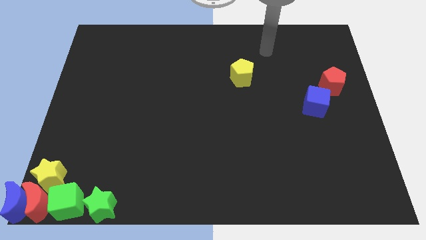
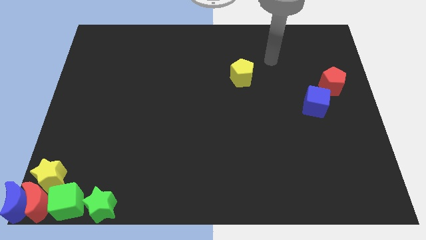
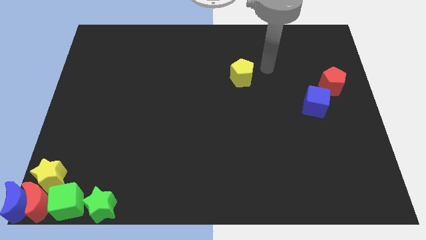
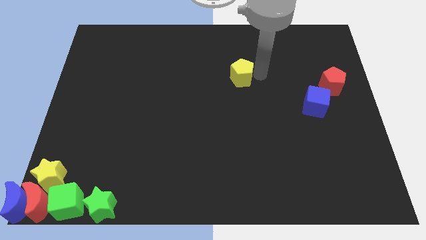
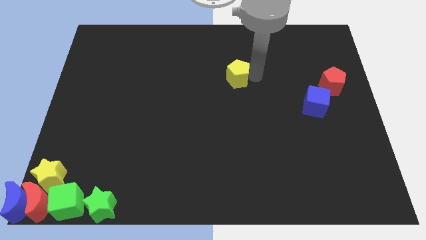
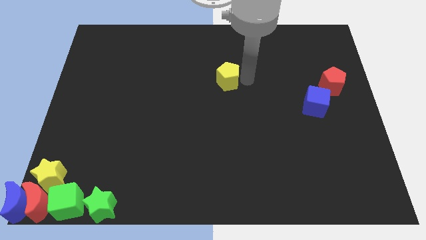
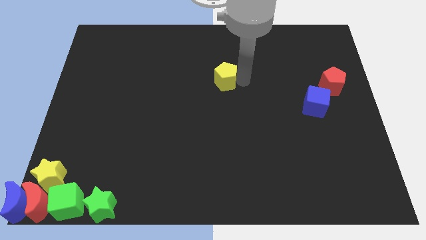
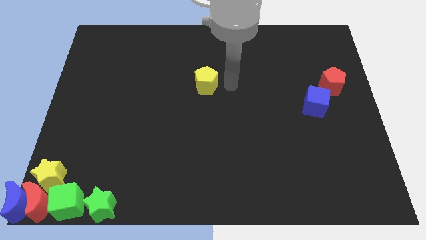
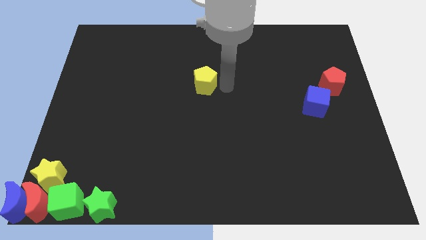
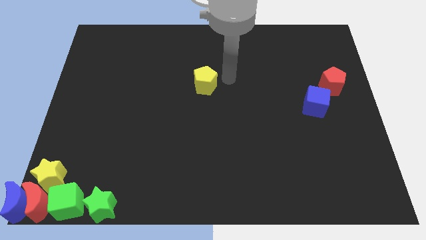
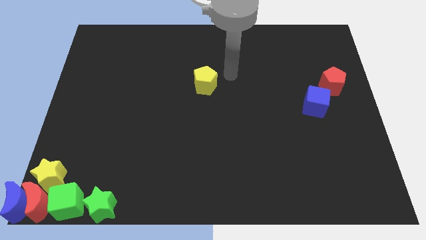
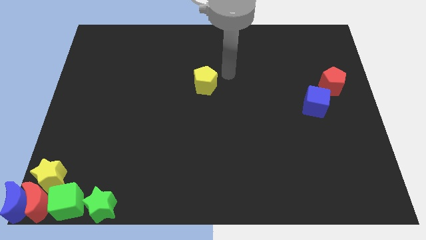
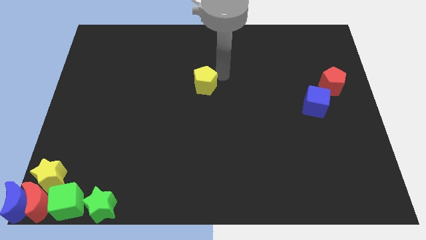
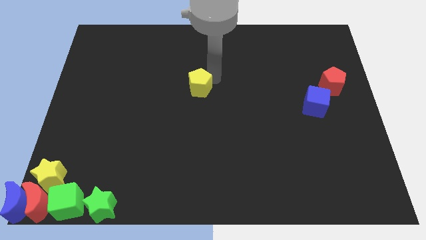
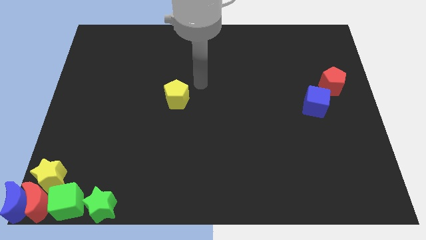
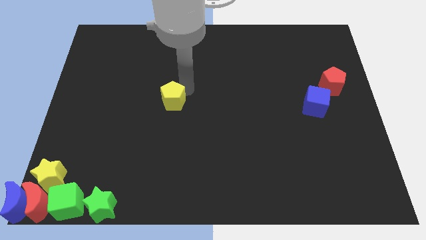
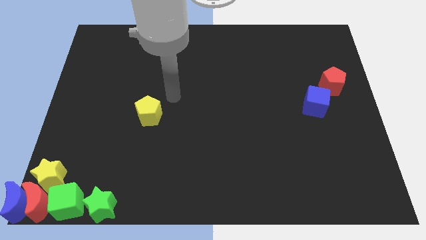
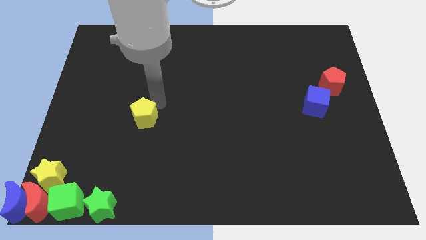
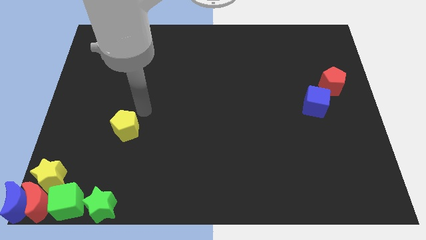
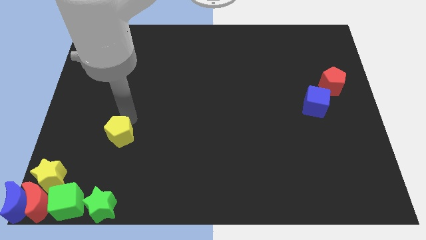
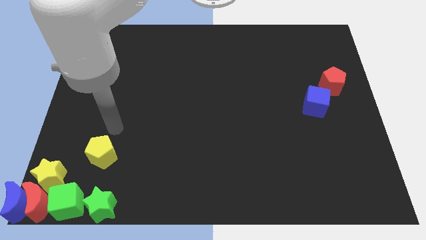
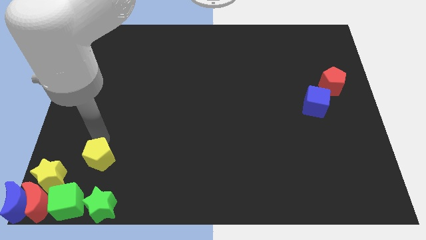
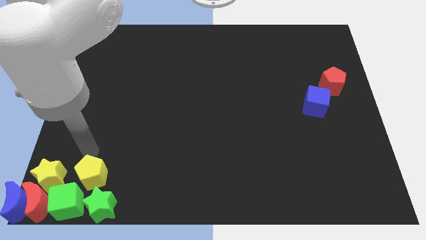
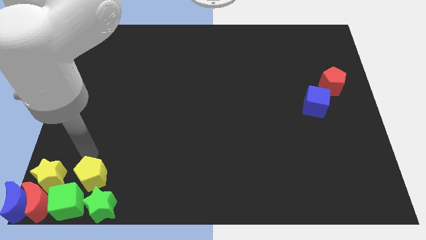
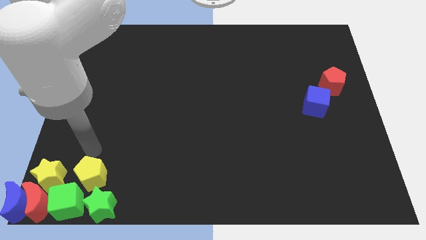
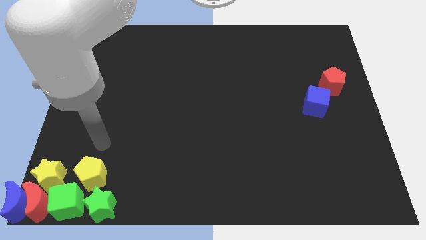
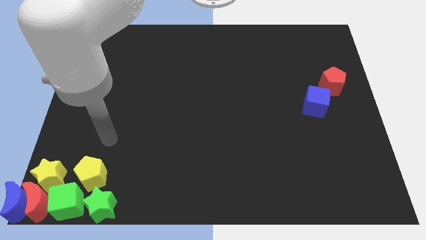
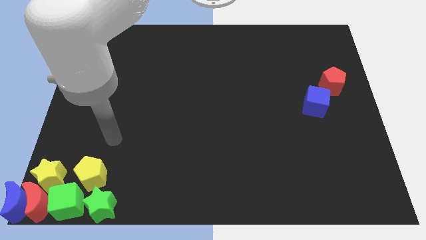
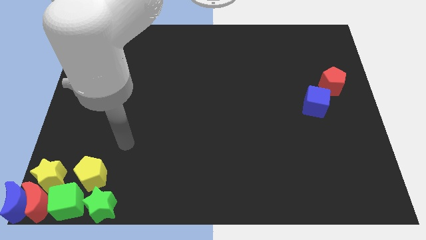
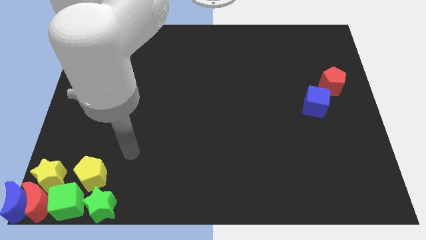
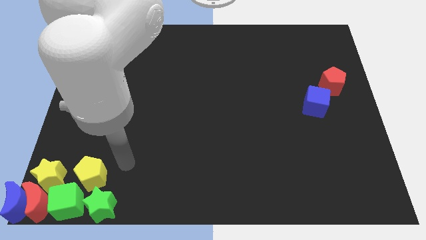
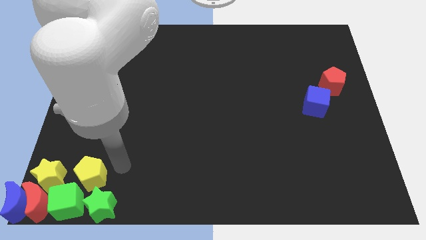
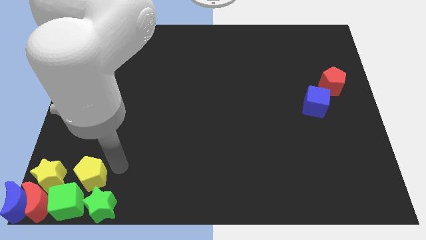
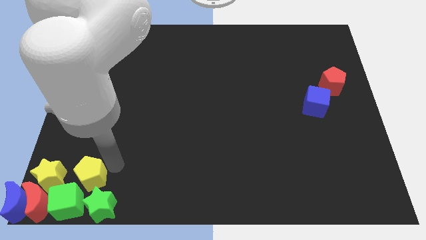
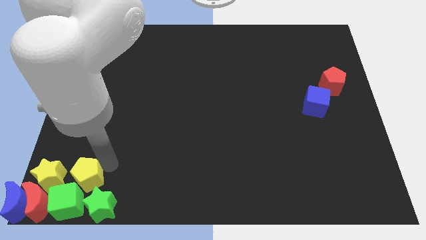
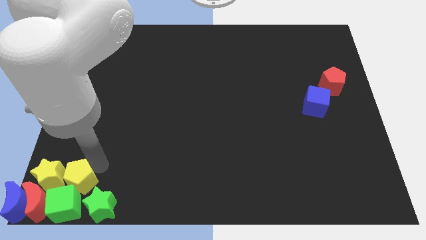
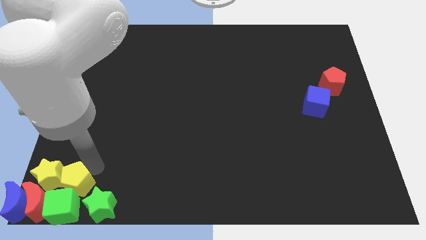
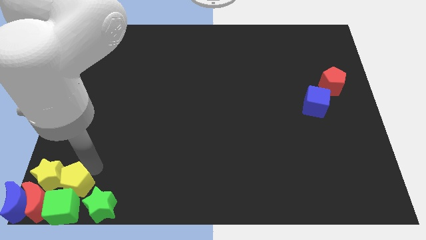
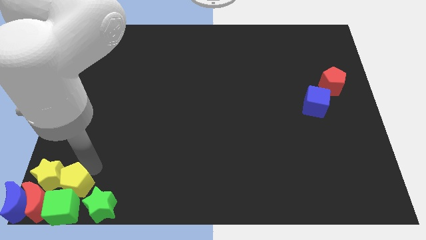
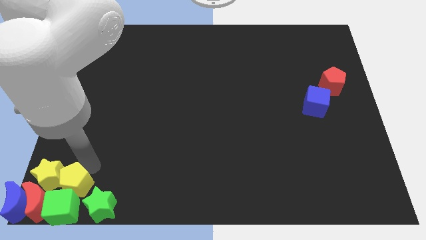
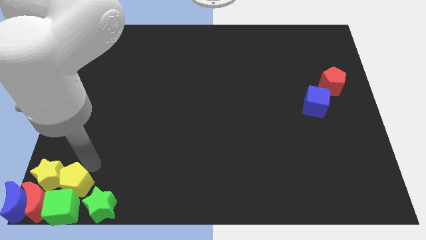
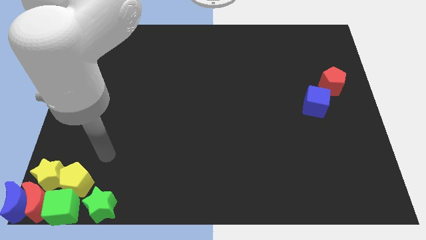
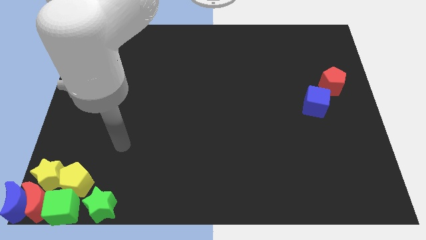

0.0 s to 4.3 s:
push the yellow pentagon into the green cube

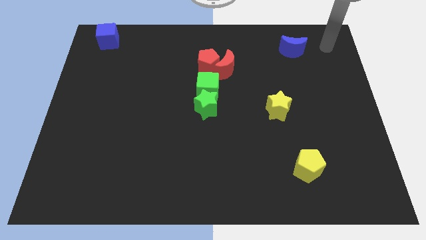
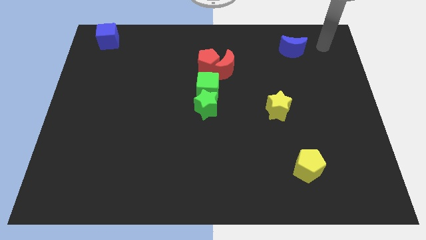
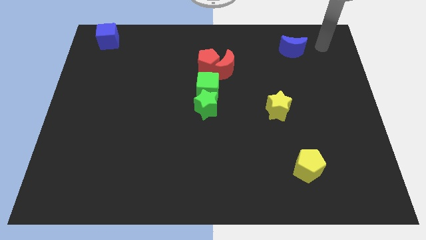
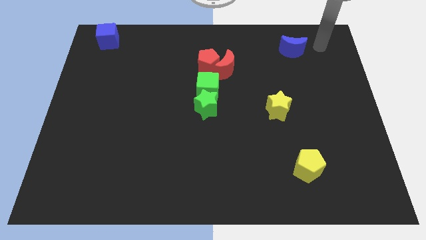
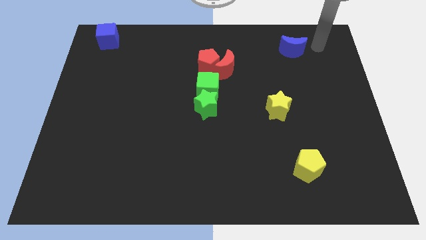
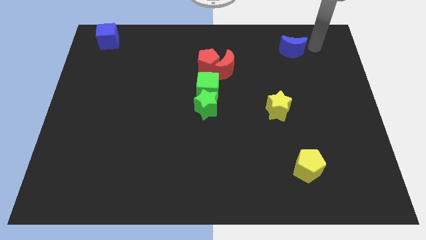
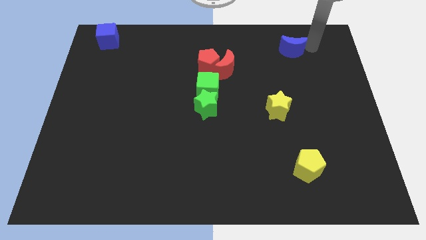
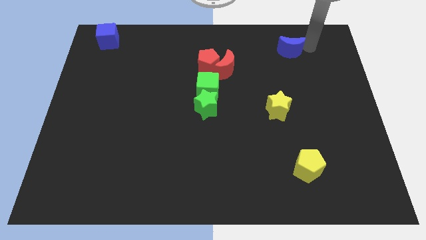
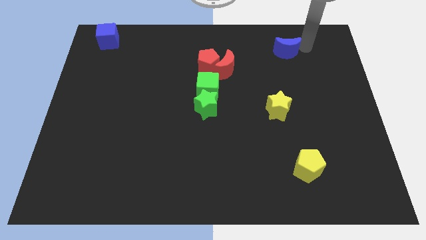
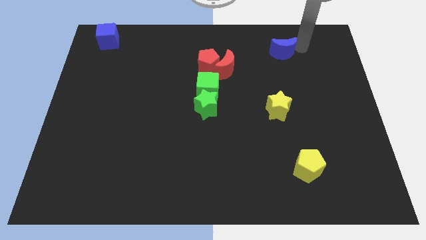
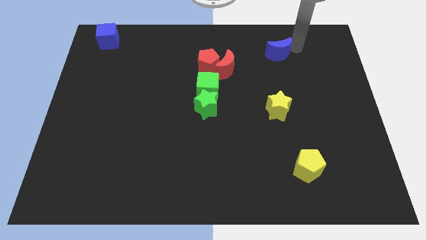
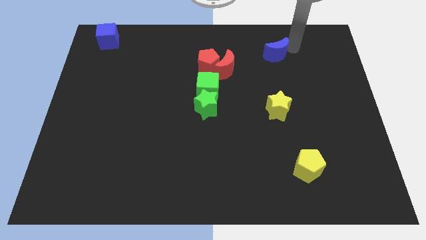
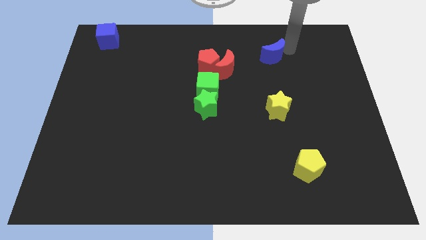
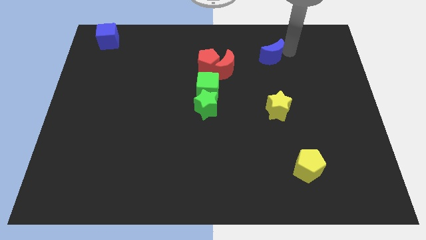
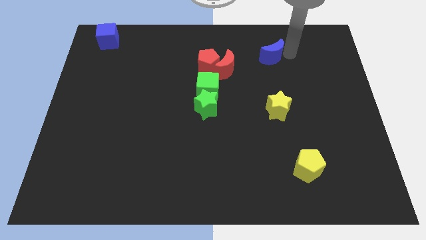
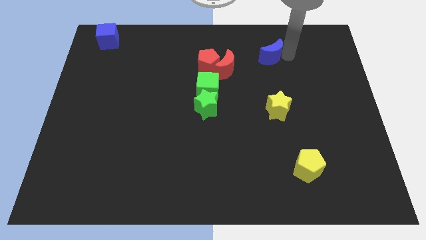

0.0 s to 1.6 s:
place the blue moon vertically above the yellow star

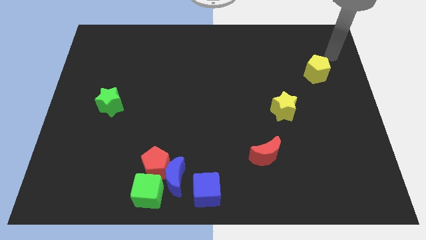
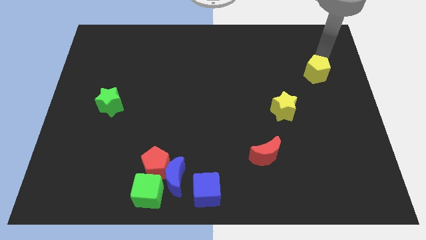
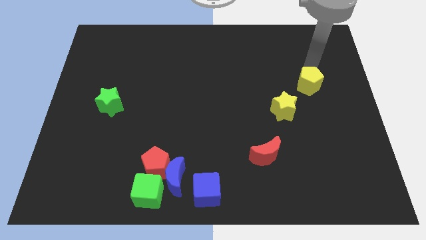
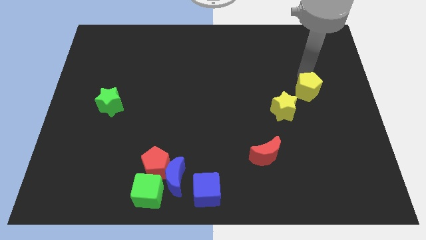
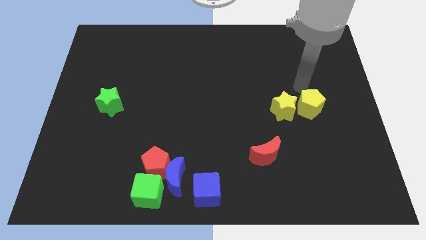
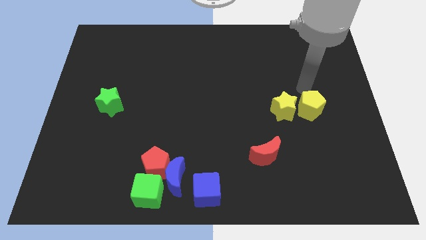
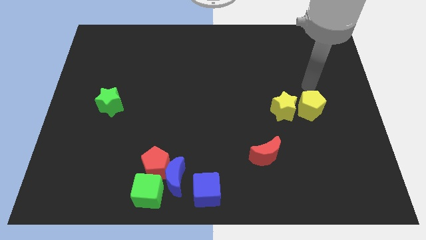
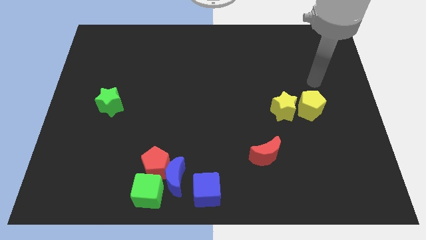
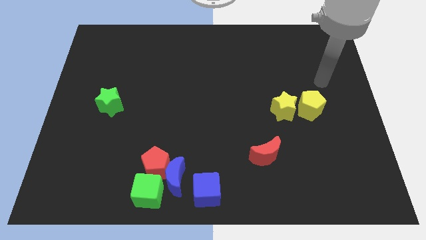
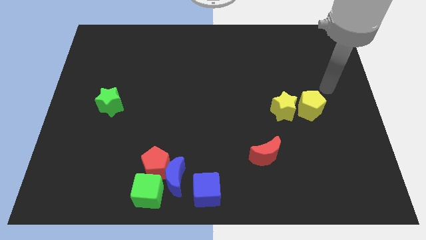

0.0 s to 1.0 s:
move yellow pentagon right to yellow star

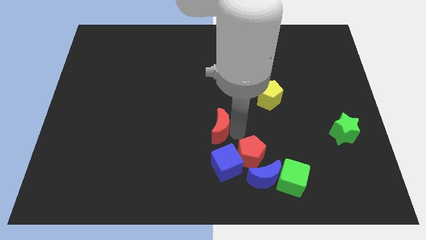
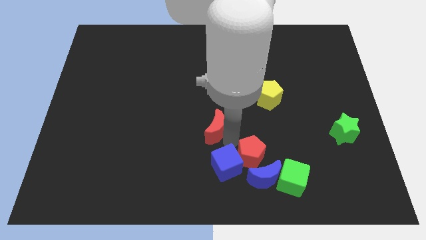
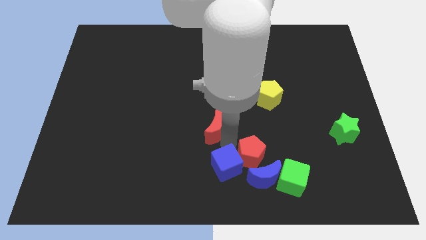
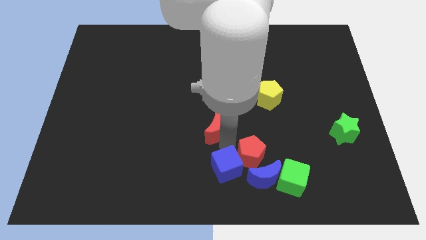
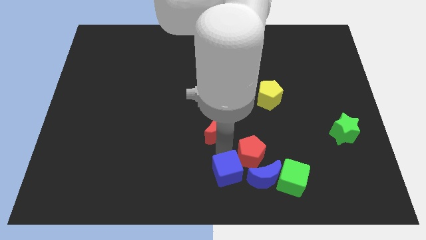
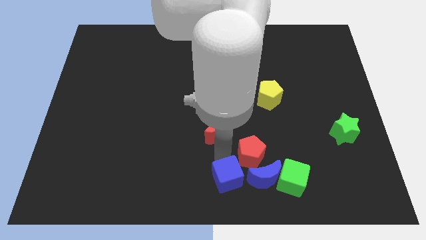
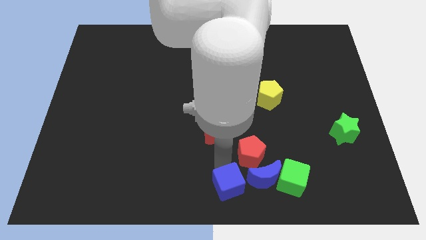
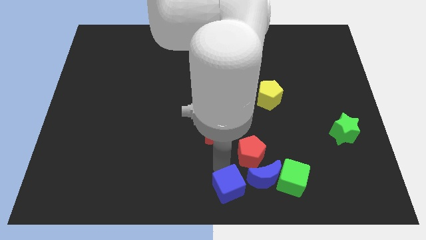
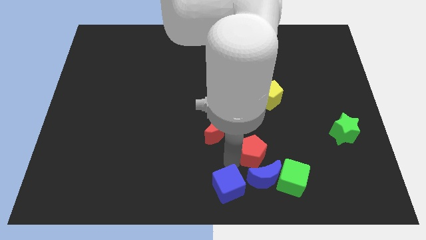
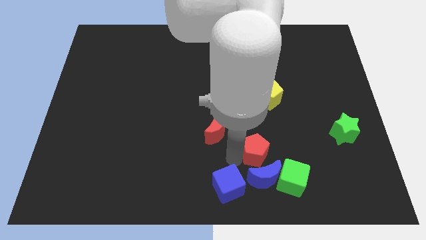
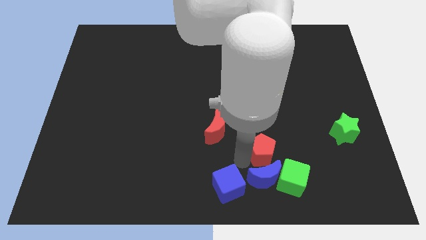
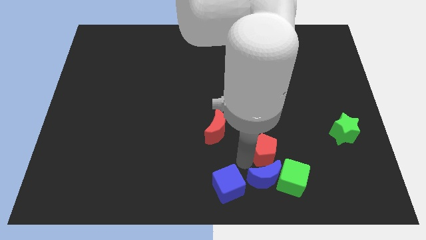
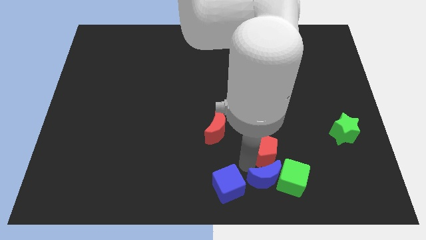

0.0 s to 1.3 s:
push the blue cube downward

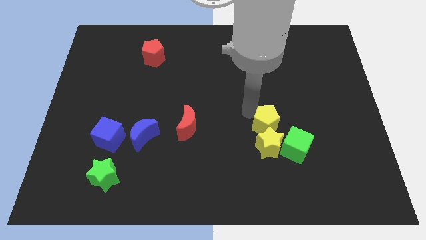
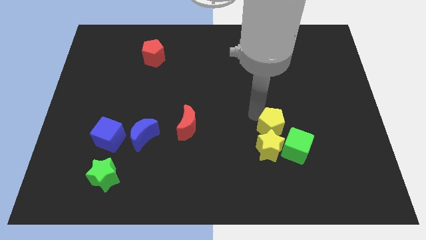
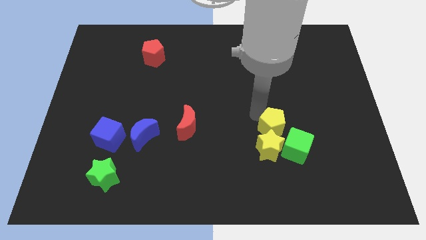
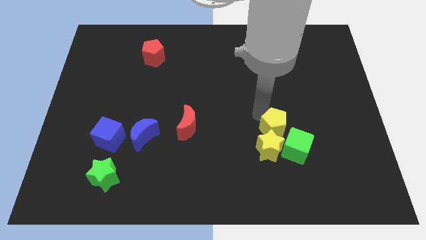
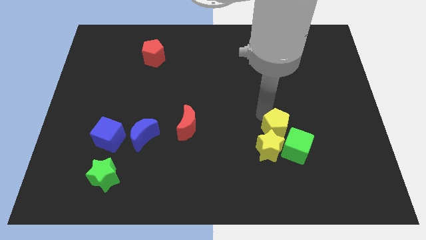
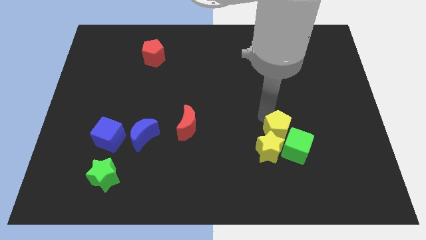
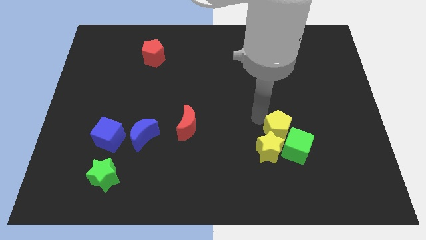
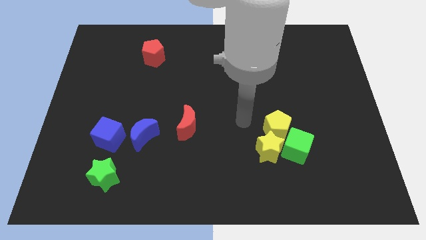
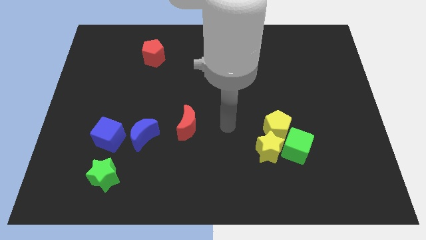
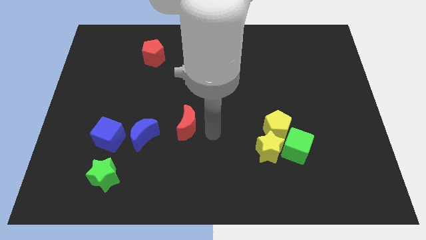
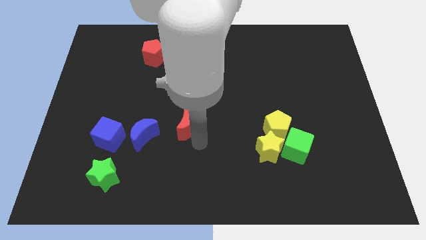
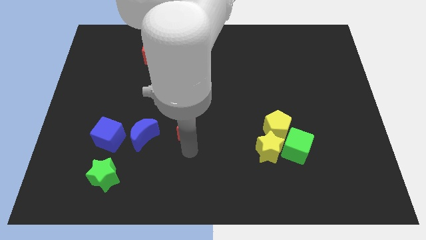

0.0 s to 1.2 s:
move the arm away from the yellow pentagon
